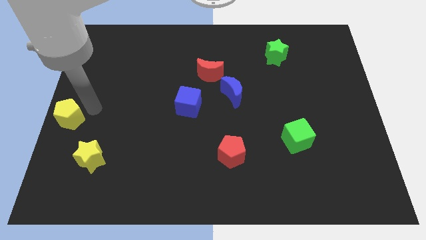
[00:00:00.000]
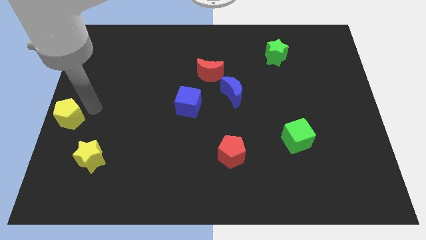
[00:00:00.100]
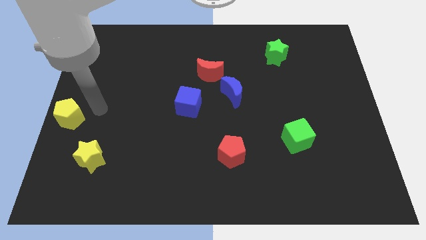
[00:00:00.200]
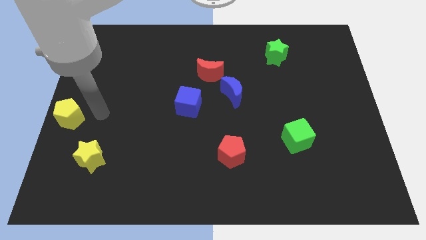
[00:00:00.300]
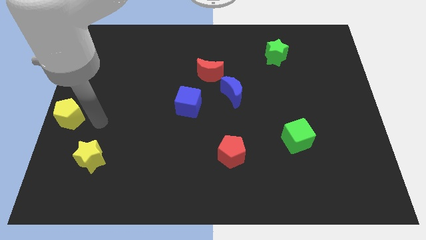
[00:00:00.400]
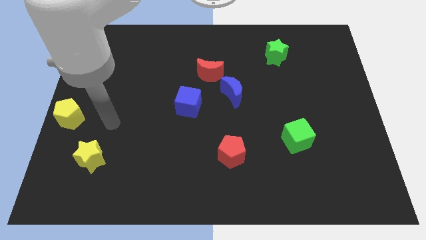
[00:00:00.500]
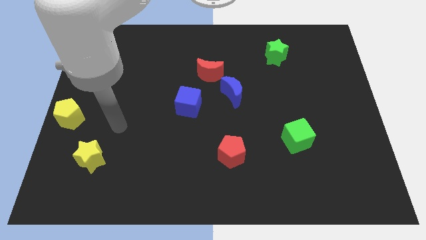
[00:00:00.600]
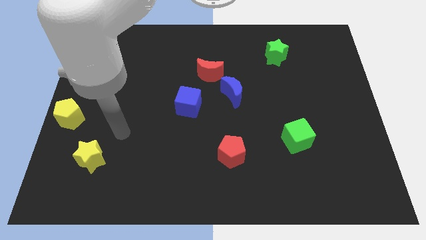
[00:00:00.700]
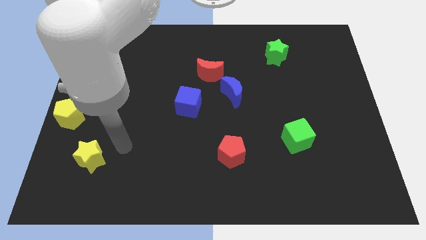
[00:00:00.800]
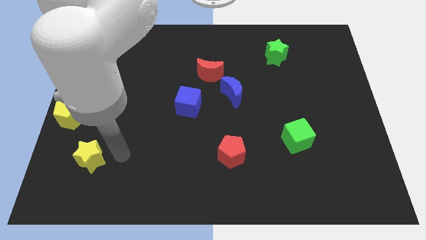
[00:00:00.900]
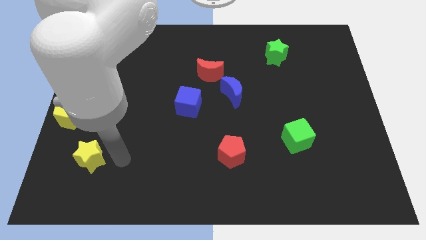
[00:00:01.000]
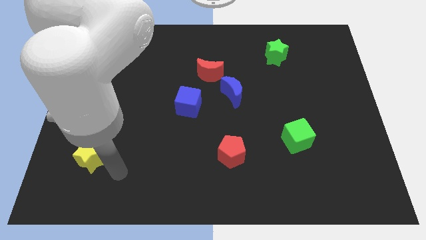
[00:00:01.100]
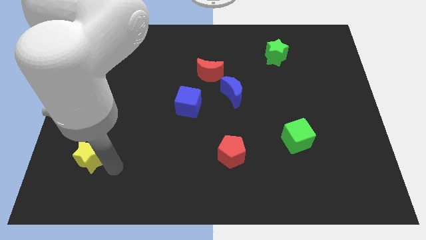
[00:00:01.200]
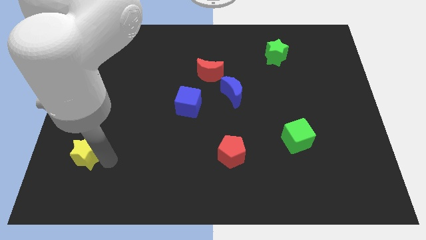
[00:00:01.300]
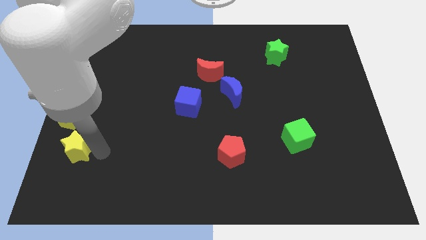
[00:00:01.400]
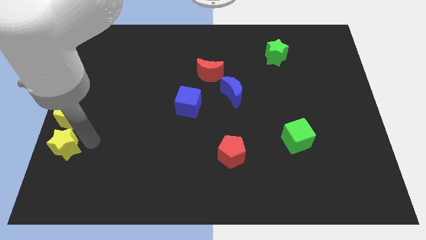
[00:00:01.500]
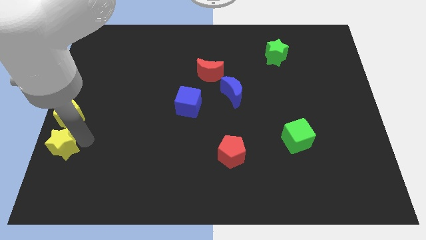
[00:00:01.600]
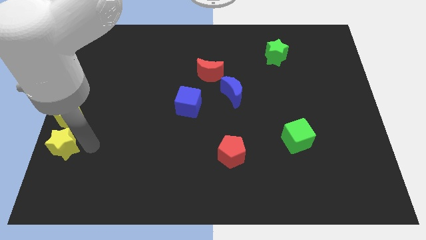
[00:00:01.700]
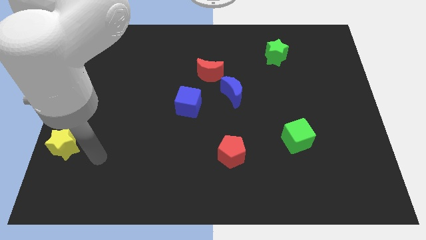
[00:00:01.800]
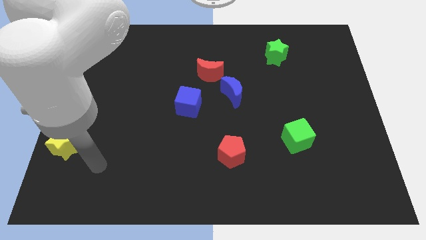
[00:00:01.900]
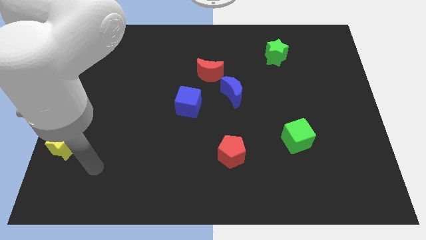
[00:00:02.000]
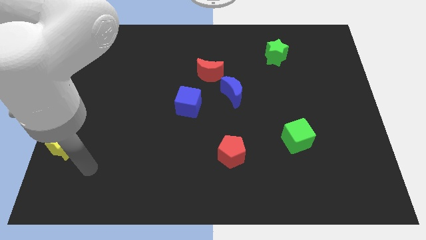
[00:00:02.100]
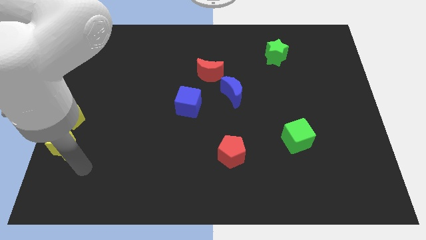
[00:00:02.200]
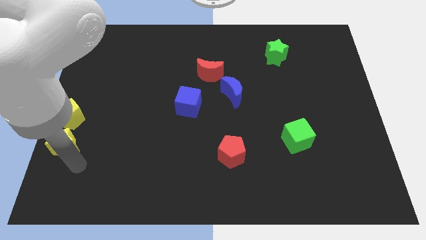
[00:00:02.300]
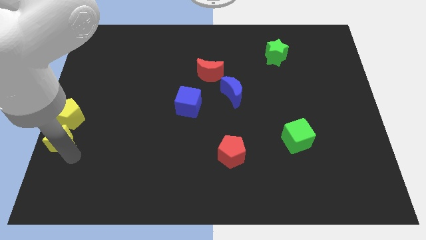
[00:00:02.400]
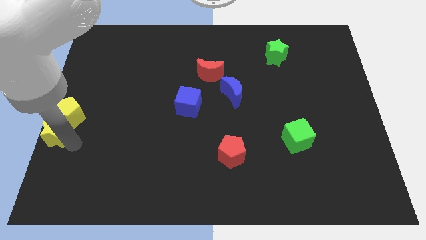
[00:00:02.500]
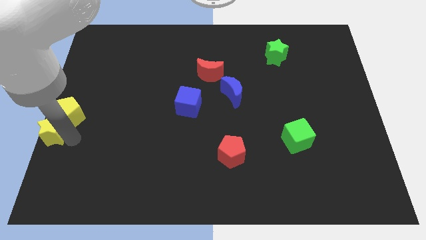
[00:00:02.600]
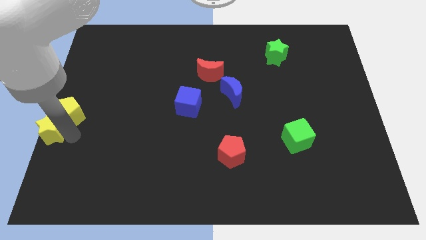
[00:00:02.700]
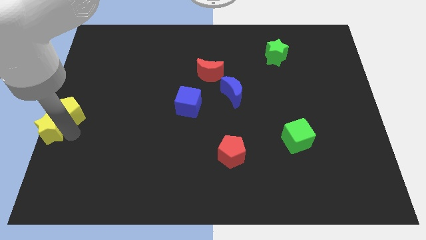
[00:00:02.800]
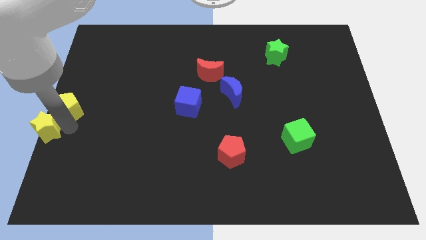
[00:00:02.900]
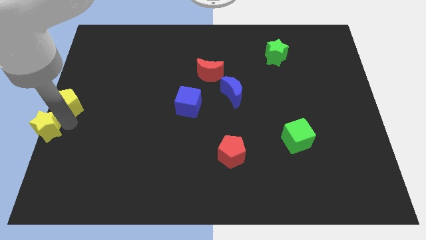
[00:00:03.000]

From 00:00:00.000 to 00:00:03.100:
push the yellow star to the bottom of the yellow pentagon

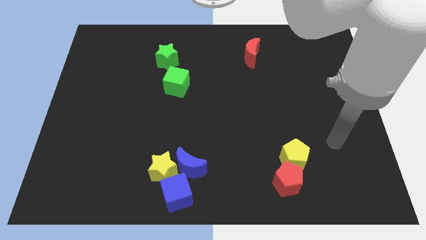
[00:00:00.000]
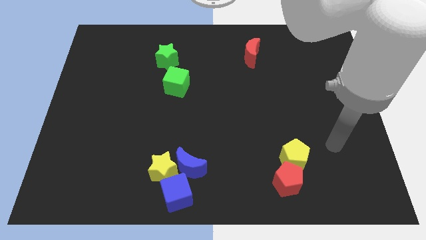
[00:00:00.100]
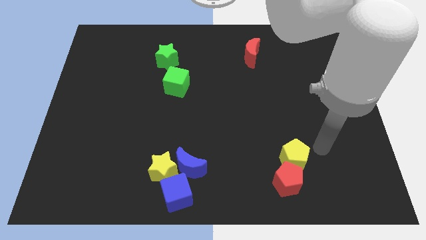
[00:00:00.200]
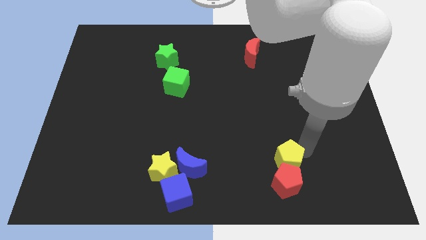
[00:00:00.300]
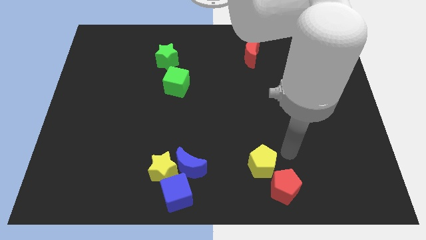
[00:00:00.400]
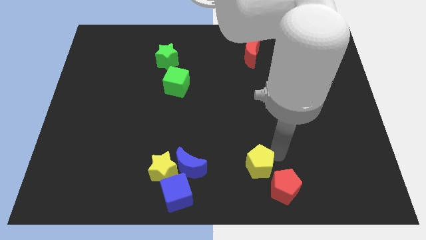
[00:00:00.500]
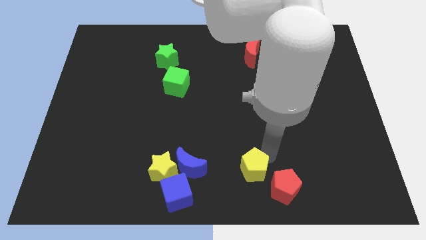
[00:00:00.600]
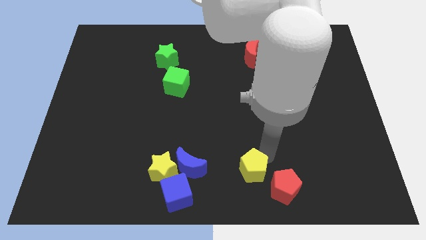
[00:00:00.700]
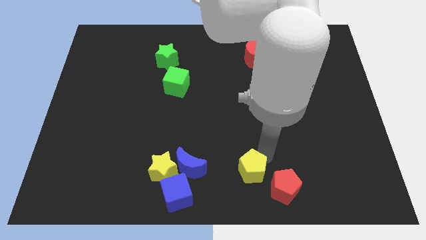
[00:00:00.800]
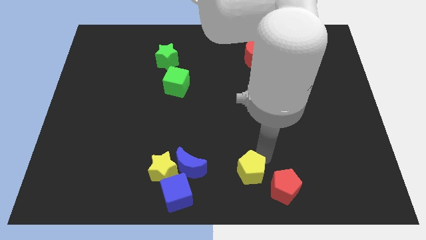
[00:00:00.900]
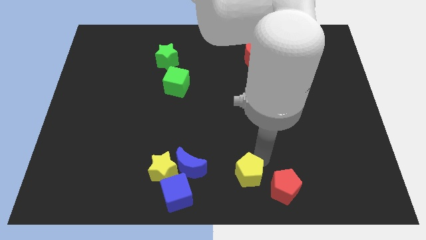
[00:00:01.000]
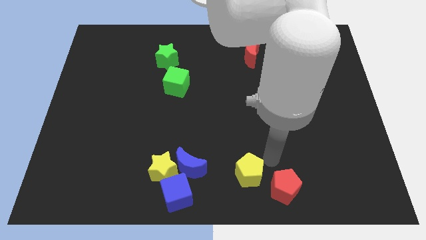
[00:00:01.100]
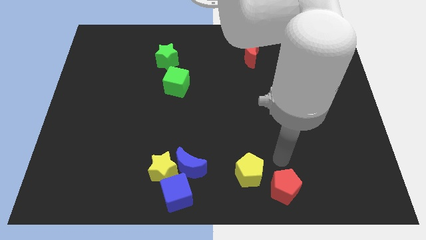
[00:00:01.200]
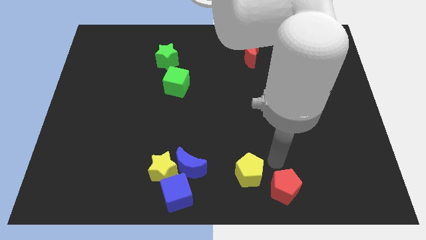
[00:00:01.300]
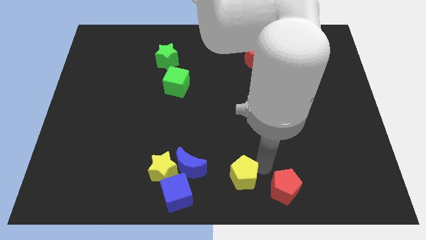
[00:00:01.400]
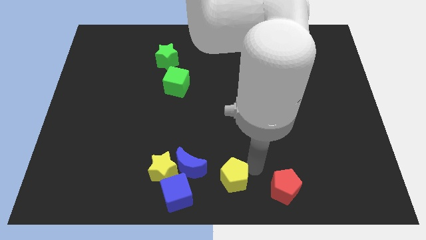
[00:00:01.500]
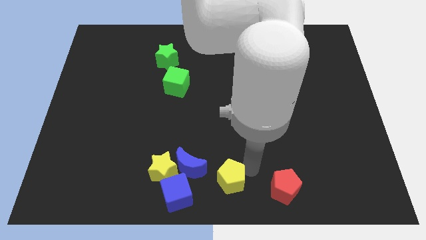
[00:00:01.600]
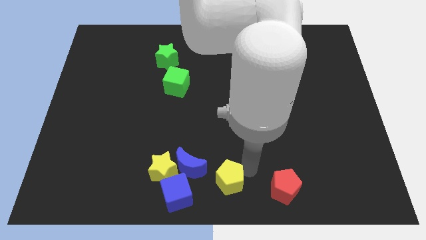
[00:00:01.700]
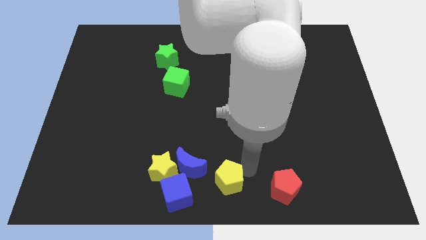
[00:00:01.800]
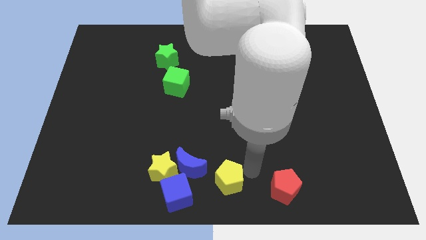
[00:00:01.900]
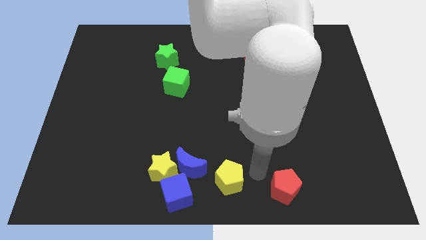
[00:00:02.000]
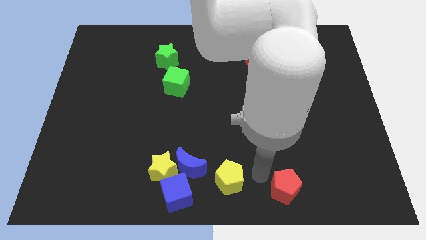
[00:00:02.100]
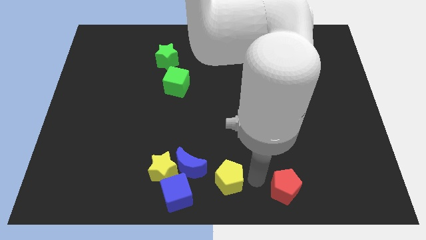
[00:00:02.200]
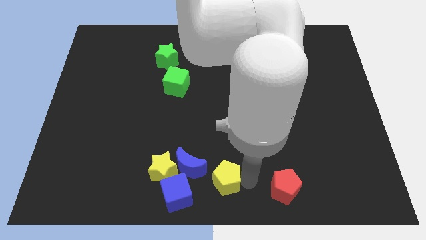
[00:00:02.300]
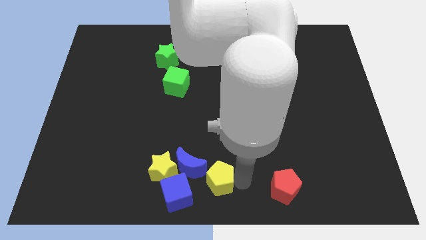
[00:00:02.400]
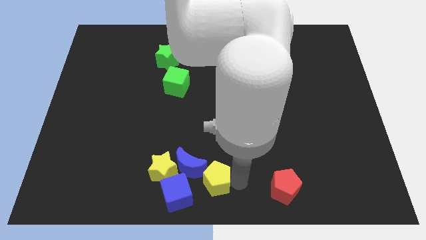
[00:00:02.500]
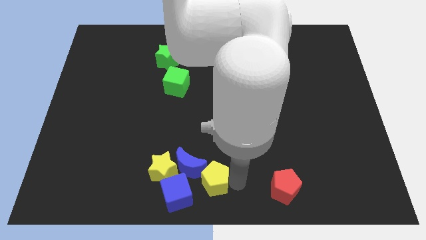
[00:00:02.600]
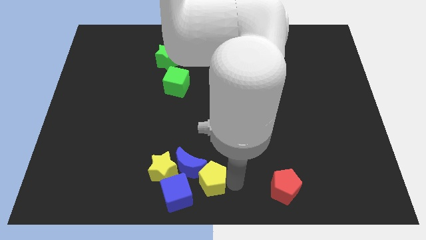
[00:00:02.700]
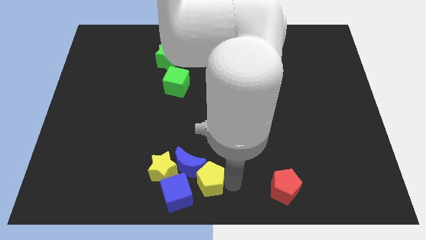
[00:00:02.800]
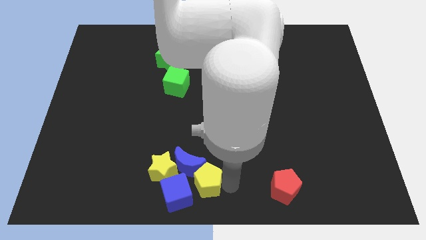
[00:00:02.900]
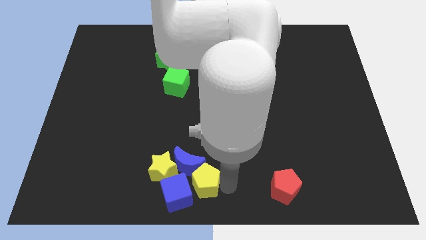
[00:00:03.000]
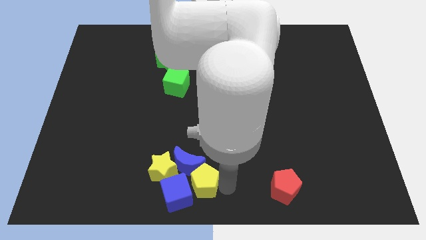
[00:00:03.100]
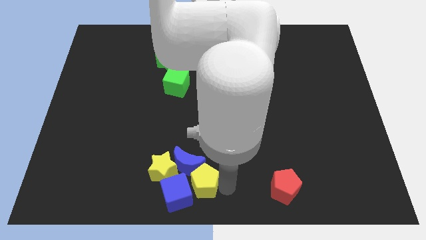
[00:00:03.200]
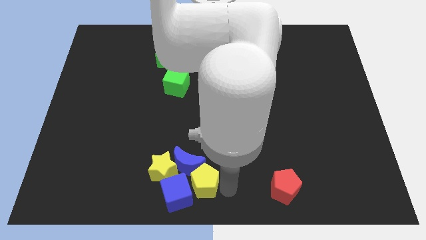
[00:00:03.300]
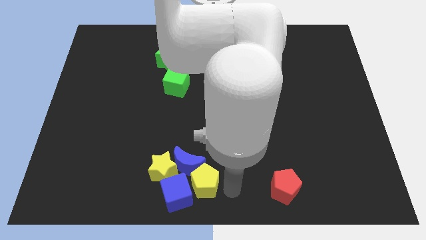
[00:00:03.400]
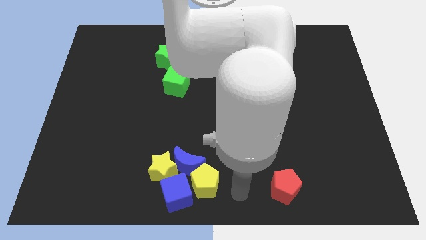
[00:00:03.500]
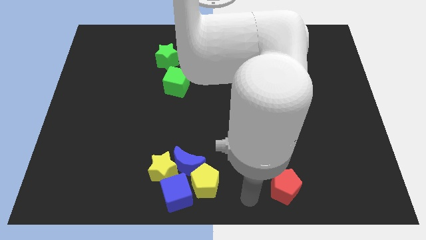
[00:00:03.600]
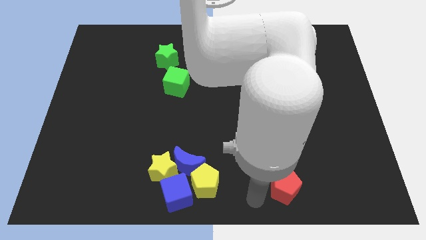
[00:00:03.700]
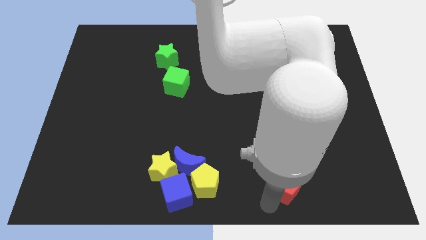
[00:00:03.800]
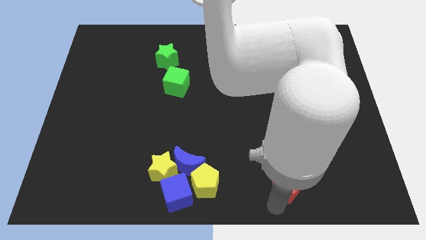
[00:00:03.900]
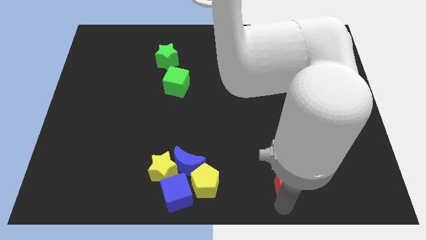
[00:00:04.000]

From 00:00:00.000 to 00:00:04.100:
place the yellow pentagon below the blue moon

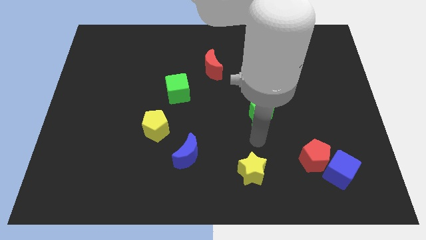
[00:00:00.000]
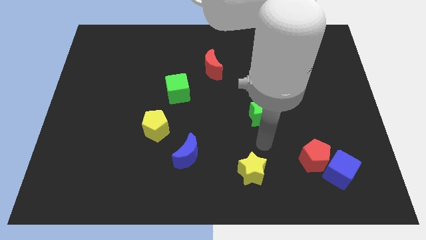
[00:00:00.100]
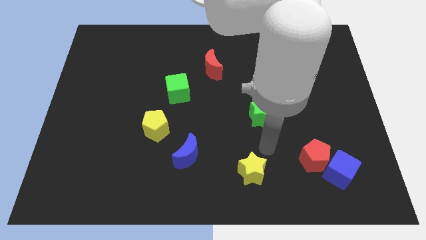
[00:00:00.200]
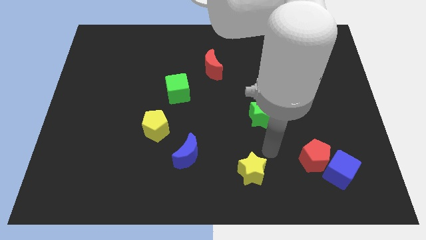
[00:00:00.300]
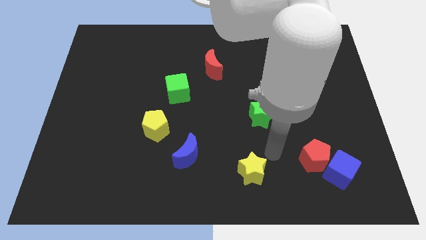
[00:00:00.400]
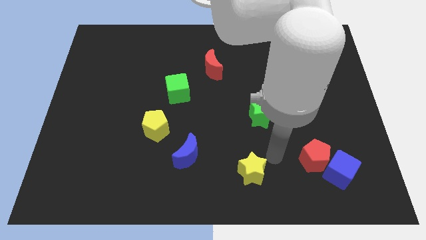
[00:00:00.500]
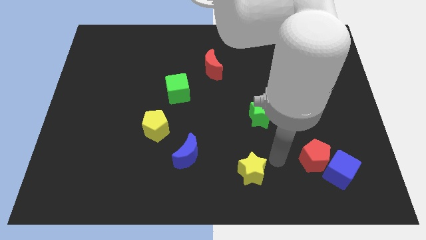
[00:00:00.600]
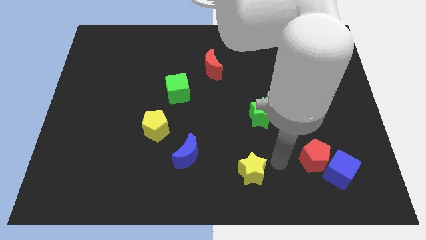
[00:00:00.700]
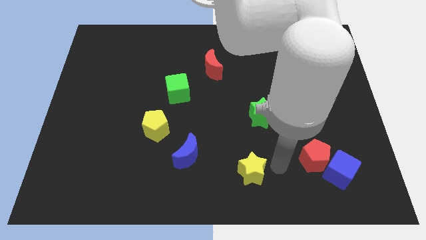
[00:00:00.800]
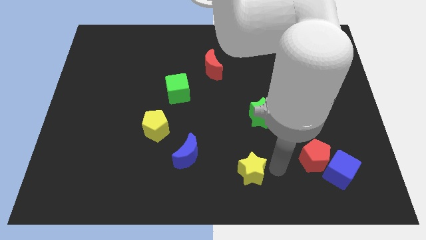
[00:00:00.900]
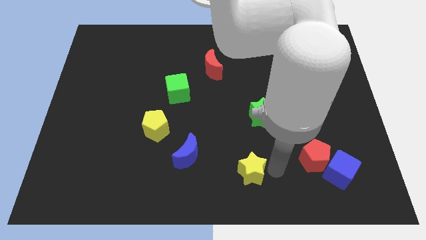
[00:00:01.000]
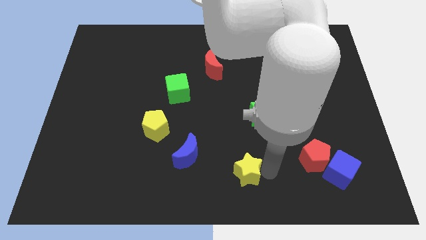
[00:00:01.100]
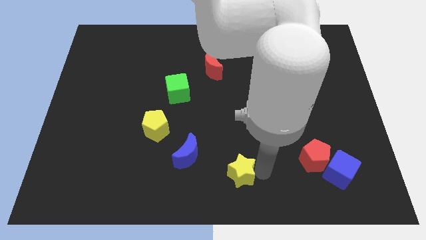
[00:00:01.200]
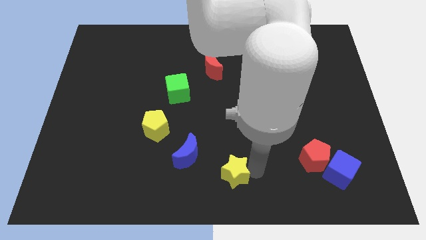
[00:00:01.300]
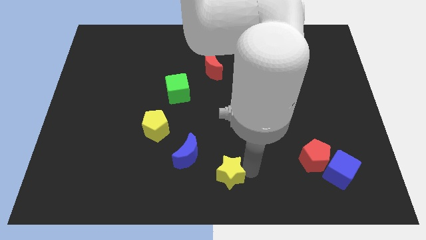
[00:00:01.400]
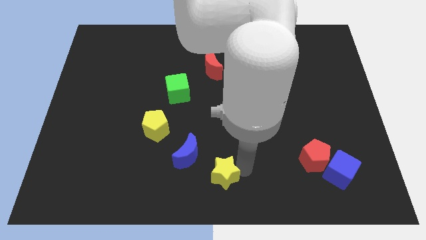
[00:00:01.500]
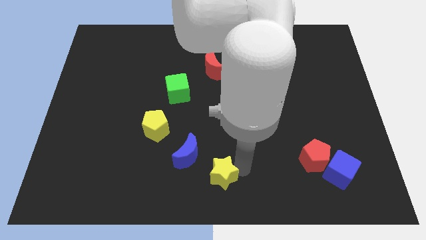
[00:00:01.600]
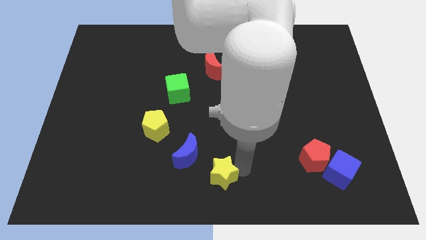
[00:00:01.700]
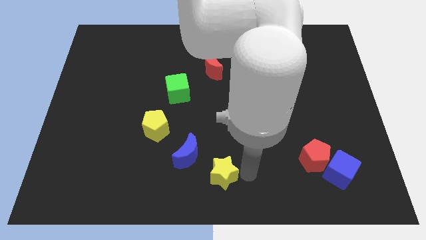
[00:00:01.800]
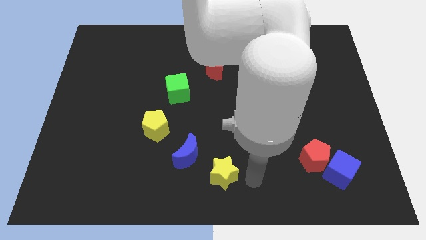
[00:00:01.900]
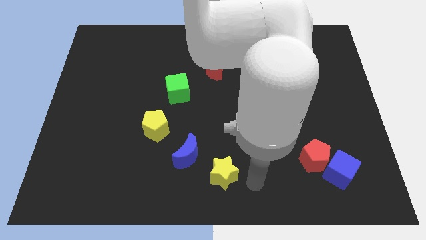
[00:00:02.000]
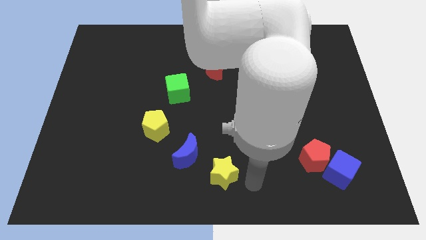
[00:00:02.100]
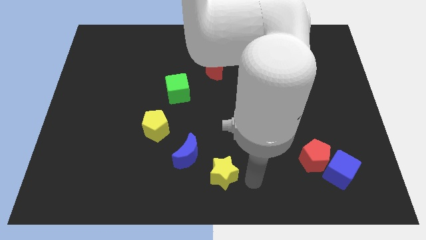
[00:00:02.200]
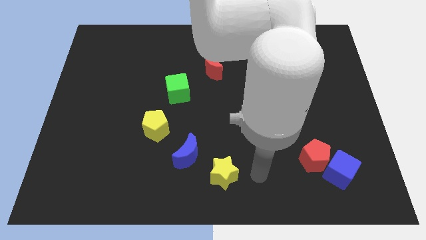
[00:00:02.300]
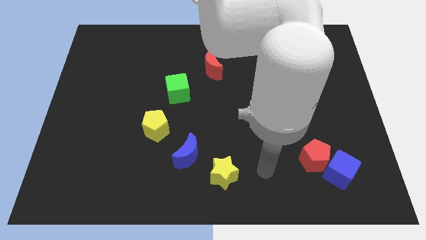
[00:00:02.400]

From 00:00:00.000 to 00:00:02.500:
move the yellow star slightly to the left
